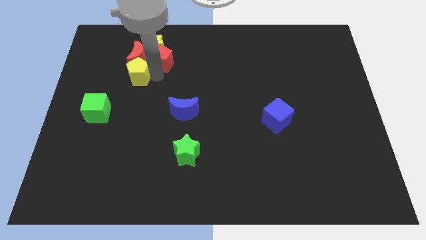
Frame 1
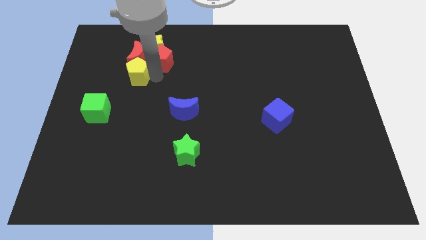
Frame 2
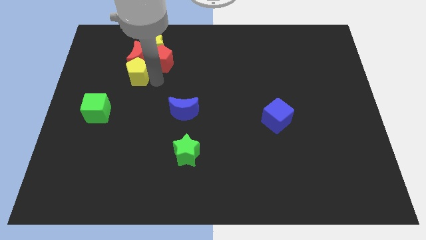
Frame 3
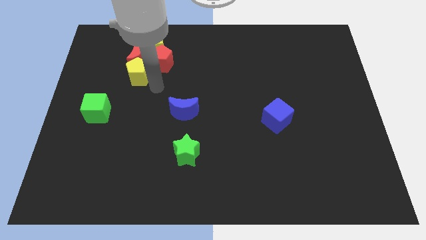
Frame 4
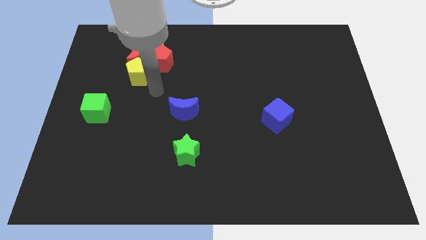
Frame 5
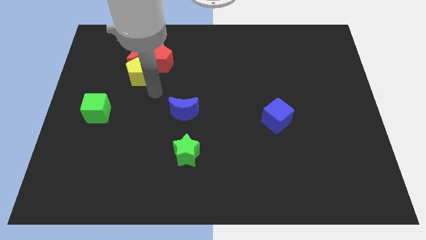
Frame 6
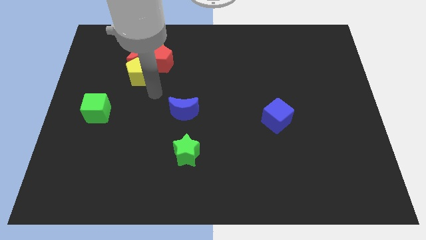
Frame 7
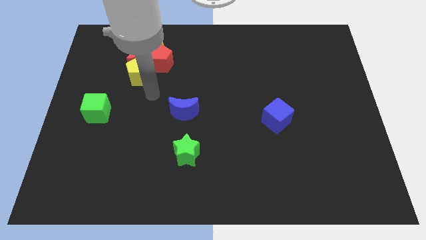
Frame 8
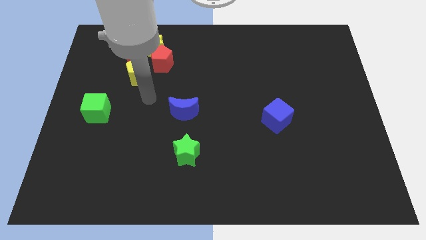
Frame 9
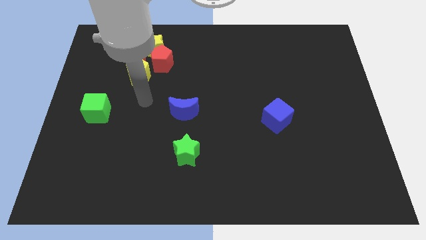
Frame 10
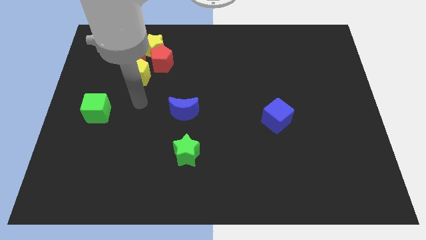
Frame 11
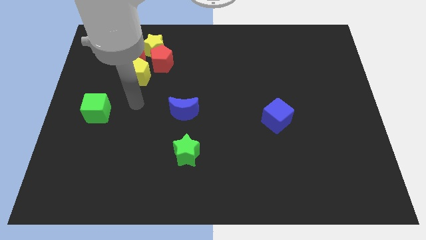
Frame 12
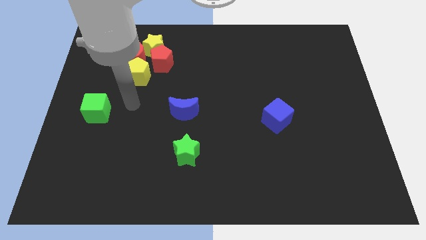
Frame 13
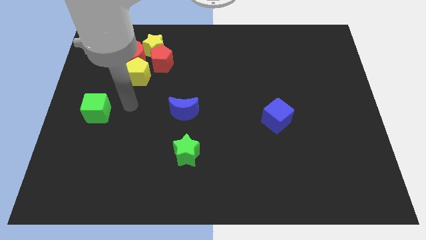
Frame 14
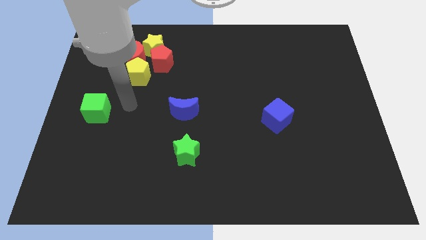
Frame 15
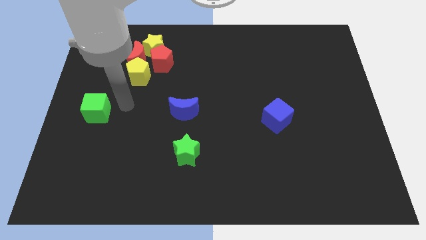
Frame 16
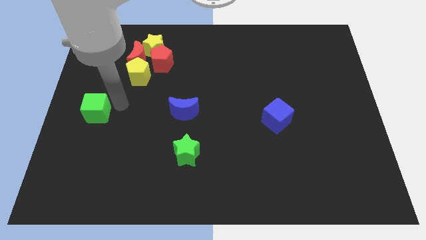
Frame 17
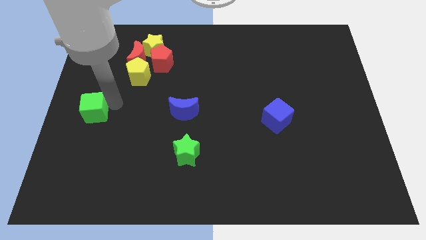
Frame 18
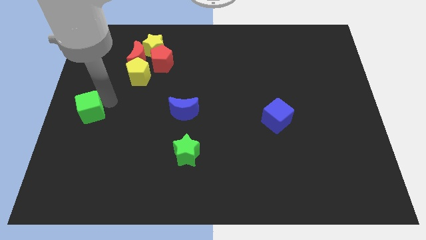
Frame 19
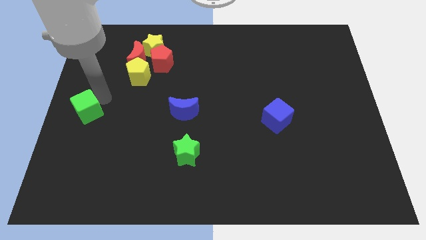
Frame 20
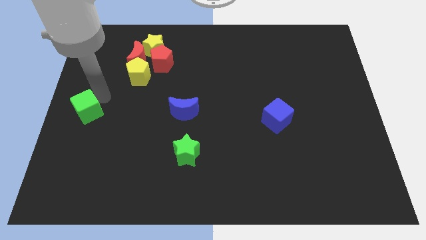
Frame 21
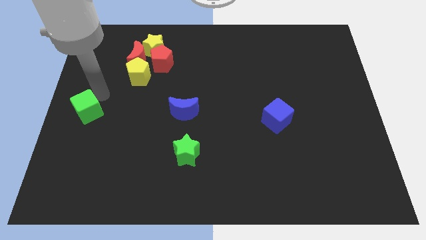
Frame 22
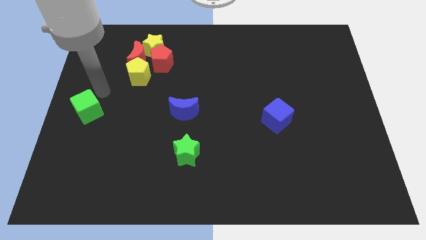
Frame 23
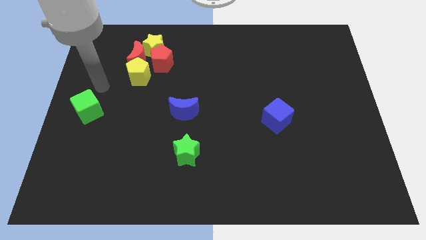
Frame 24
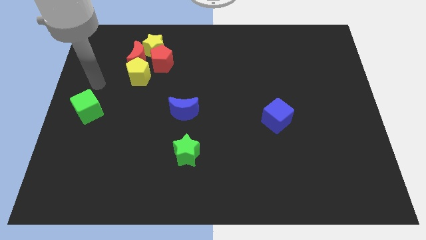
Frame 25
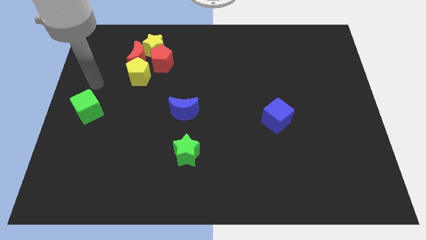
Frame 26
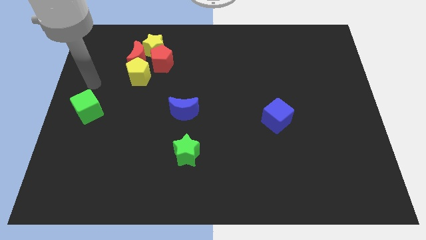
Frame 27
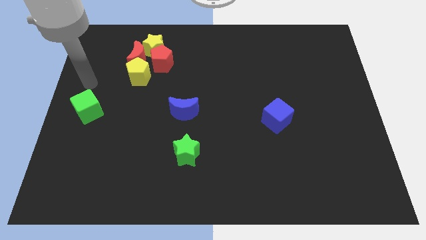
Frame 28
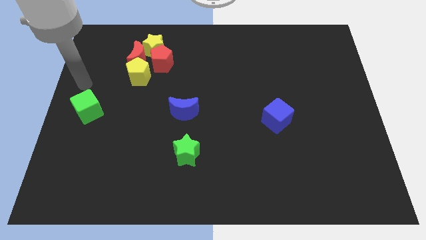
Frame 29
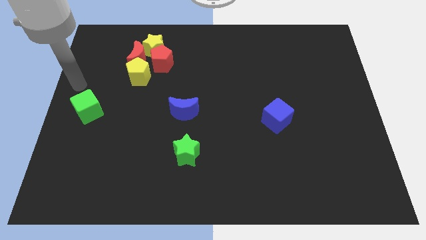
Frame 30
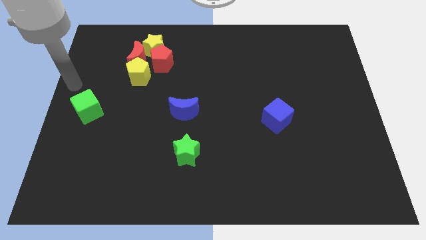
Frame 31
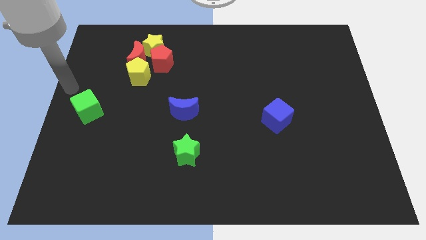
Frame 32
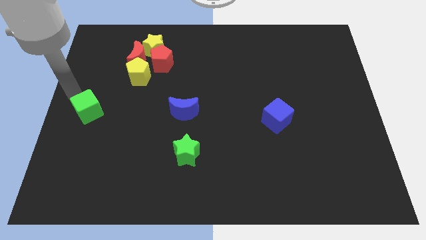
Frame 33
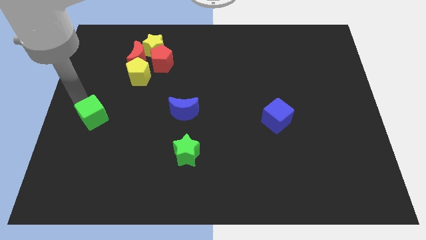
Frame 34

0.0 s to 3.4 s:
place your arm above green cube

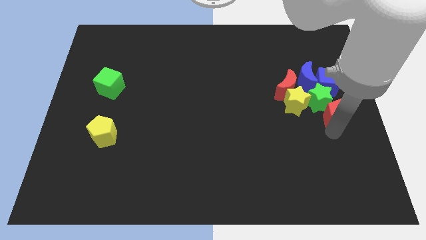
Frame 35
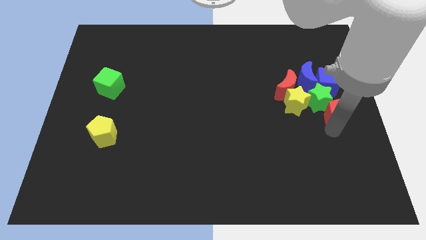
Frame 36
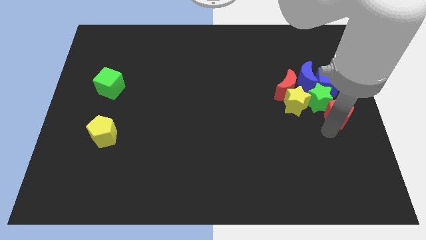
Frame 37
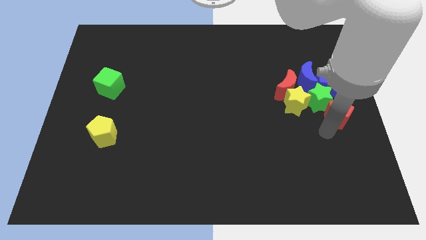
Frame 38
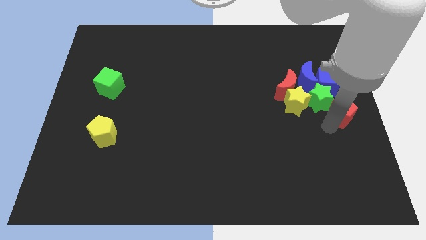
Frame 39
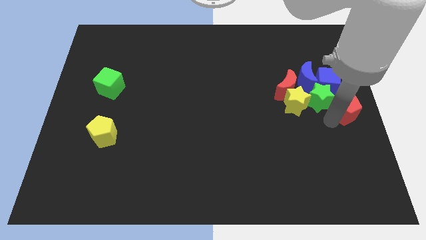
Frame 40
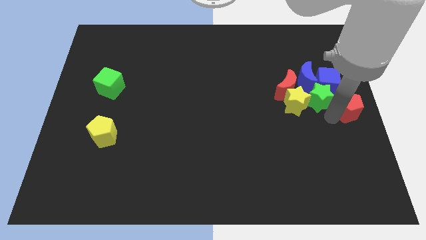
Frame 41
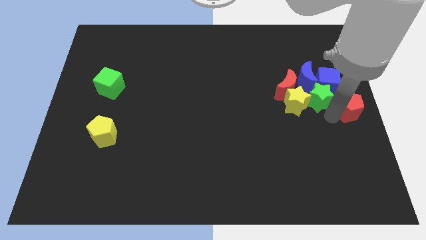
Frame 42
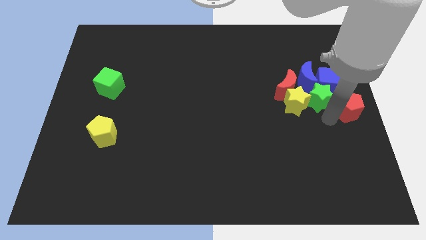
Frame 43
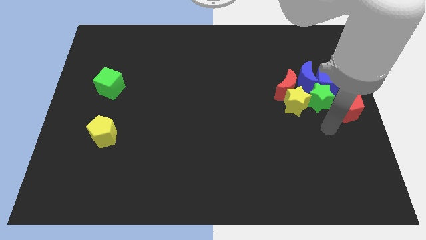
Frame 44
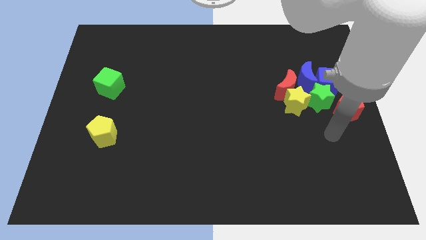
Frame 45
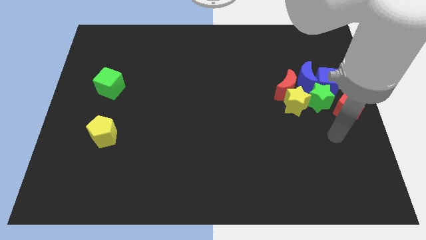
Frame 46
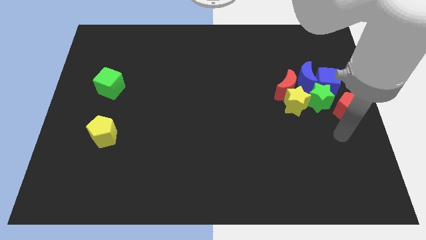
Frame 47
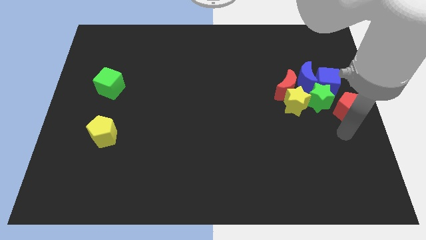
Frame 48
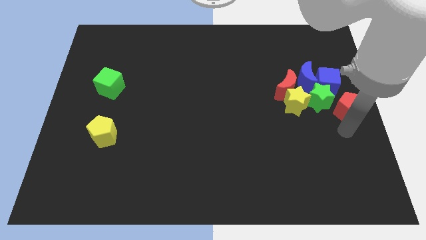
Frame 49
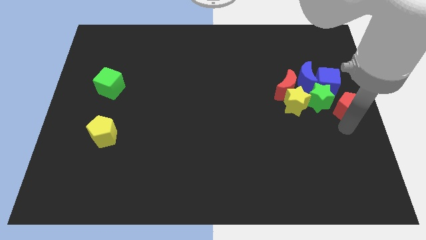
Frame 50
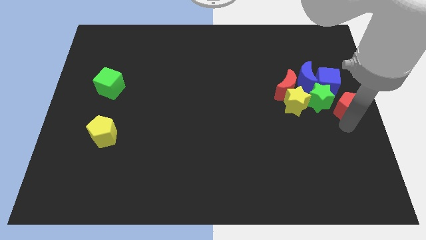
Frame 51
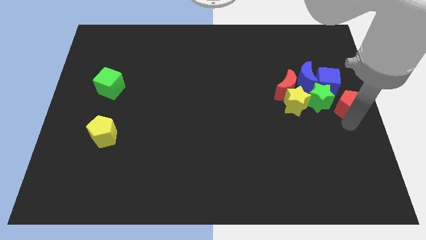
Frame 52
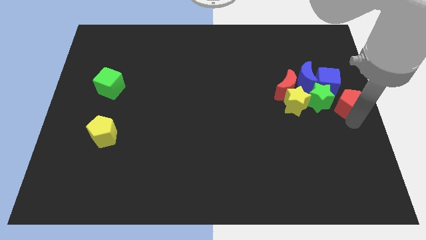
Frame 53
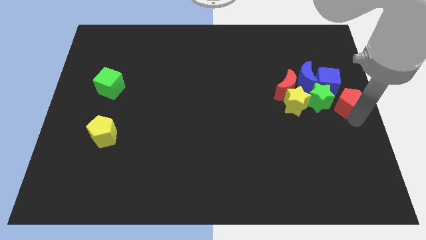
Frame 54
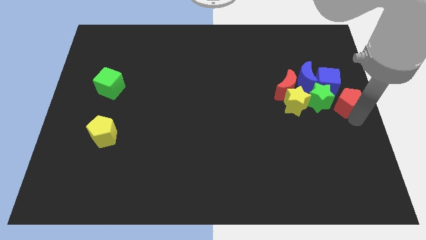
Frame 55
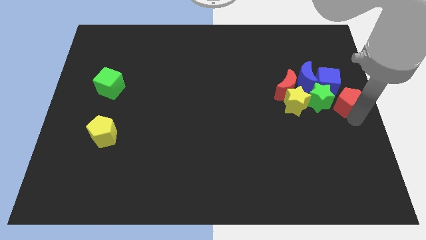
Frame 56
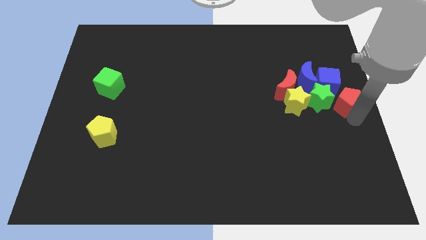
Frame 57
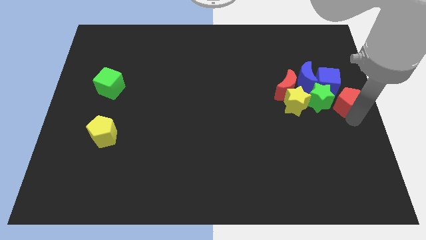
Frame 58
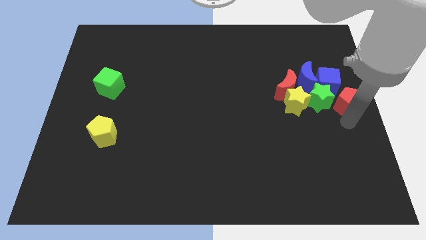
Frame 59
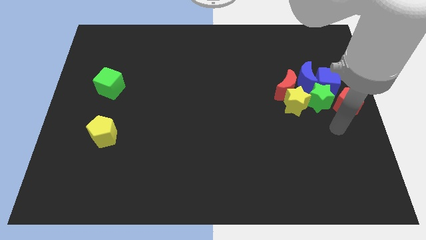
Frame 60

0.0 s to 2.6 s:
place the red pentagon to the right of the green star

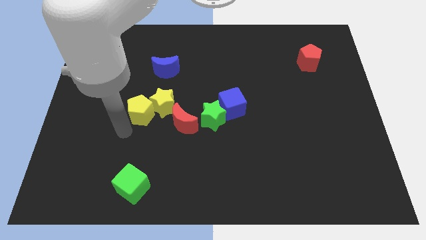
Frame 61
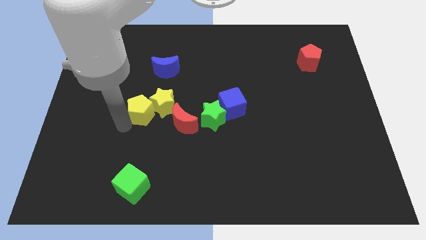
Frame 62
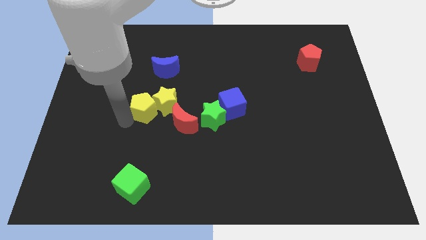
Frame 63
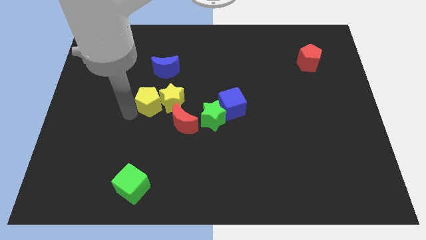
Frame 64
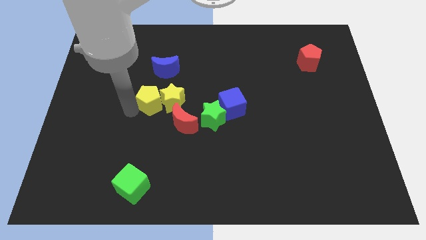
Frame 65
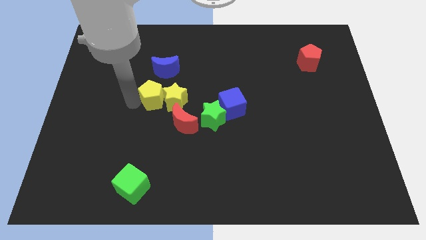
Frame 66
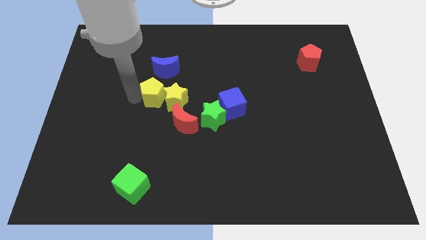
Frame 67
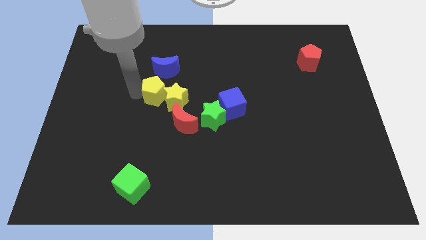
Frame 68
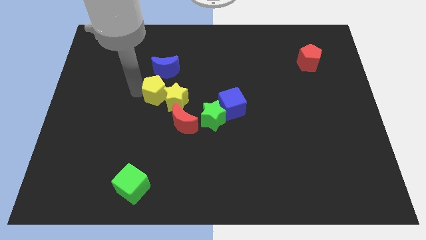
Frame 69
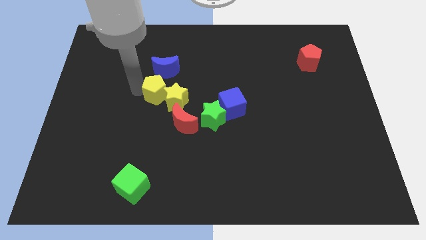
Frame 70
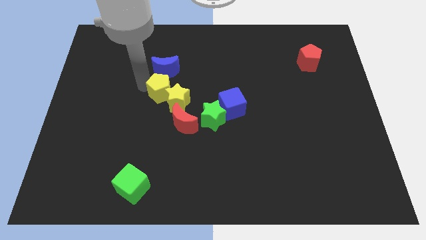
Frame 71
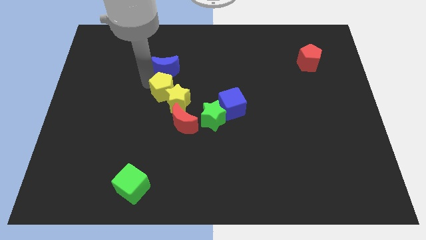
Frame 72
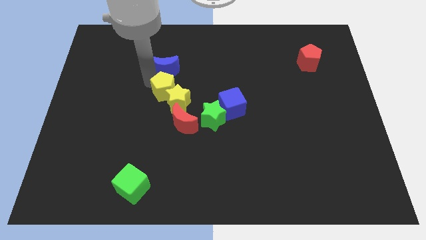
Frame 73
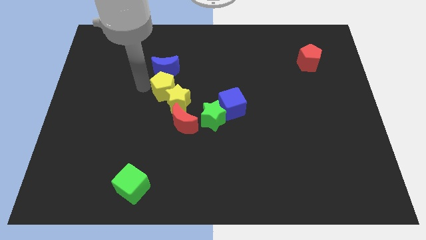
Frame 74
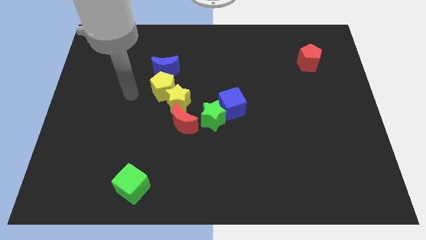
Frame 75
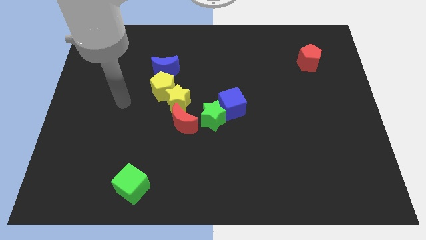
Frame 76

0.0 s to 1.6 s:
drag the yellow pentagon vertically below the blue moon

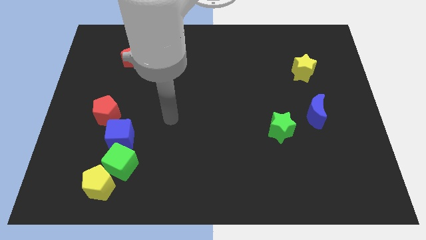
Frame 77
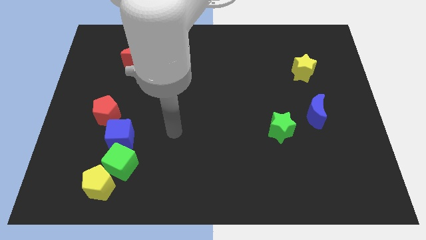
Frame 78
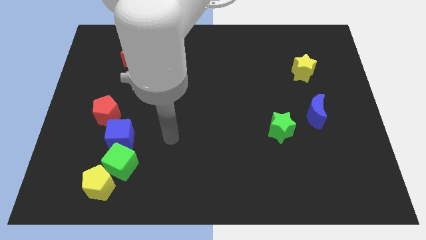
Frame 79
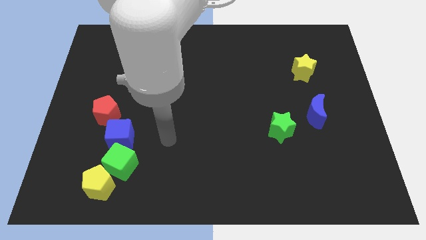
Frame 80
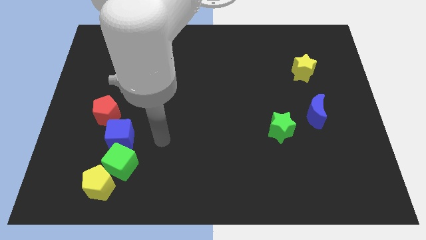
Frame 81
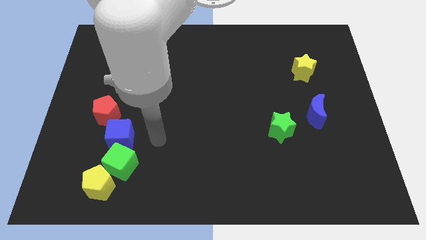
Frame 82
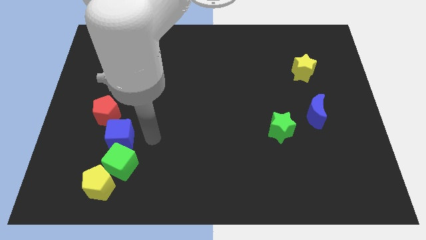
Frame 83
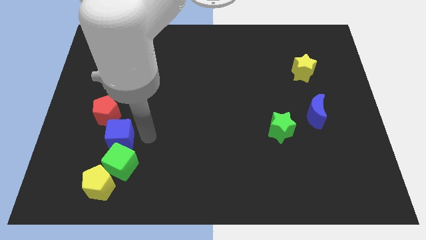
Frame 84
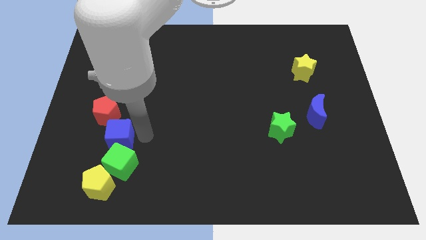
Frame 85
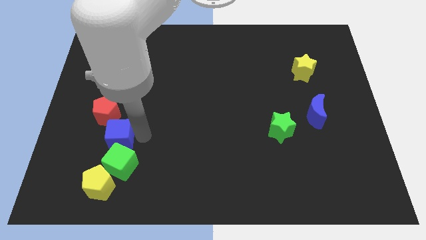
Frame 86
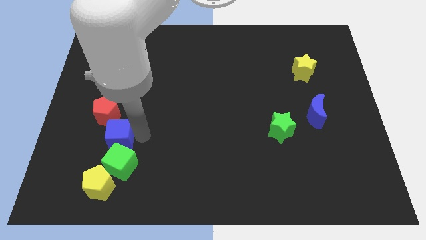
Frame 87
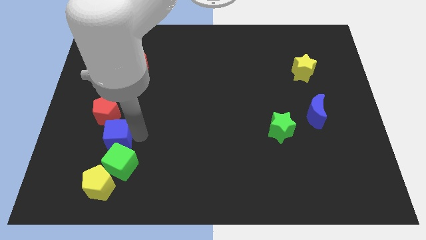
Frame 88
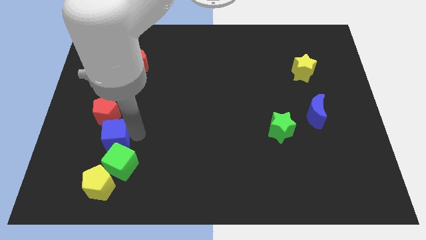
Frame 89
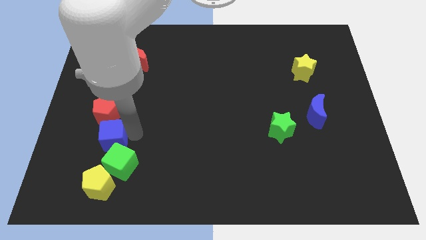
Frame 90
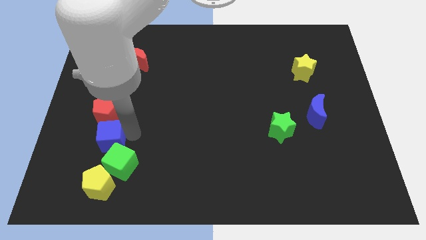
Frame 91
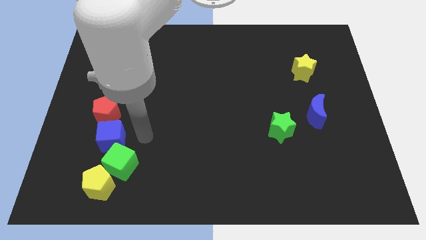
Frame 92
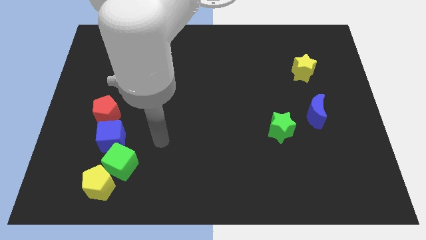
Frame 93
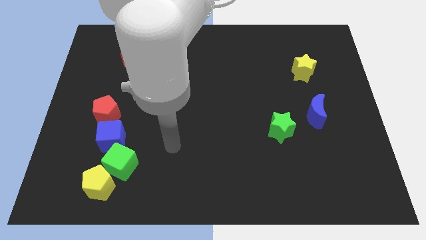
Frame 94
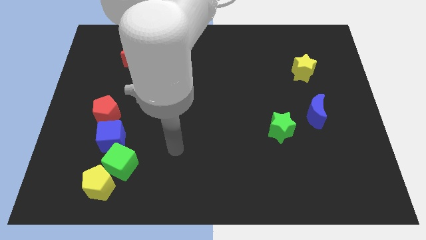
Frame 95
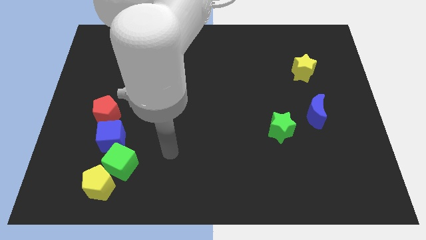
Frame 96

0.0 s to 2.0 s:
push the blue cube to the top left side of the green cube
